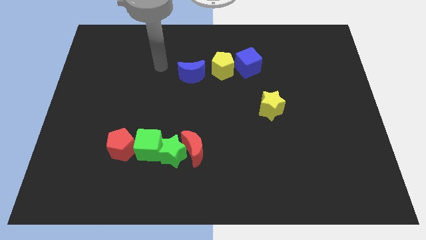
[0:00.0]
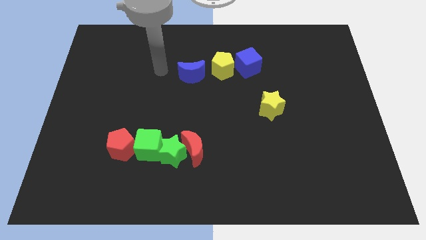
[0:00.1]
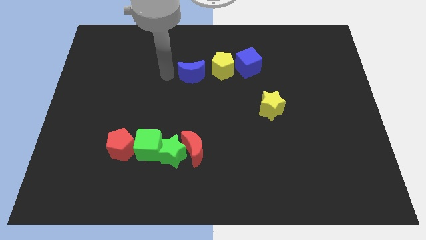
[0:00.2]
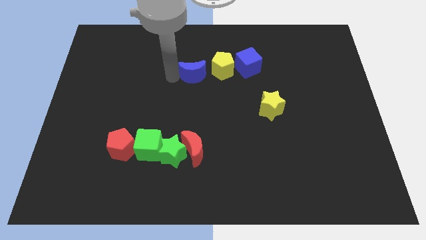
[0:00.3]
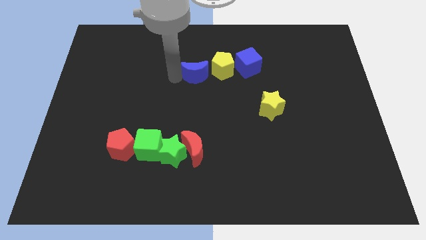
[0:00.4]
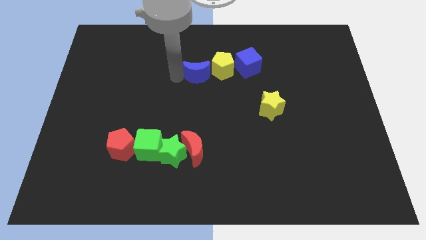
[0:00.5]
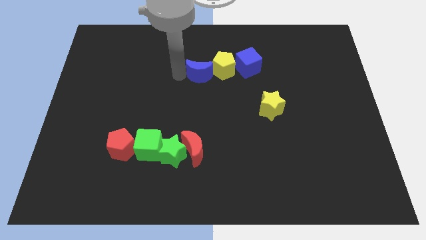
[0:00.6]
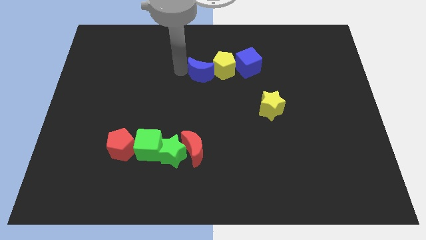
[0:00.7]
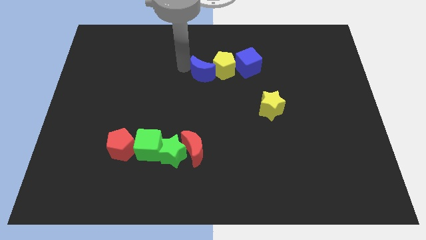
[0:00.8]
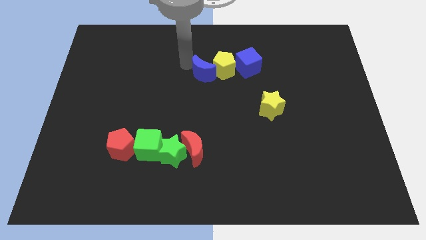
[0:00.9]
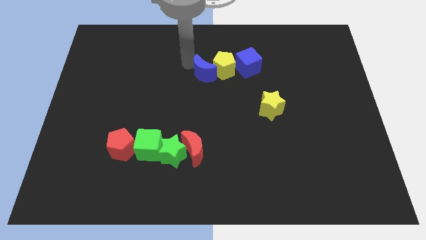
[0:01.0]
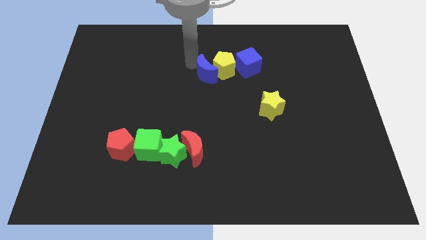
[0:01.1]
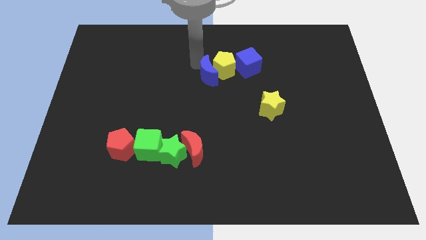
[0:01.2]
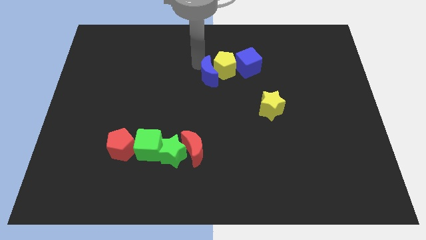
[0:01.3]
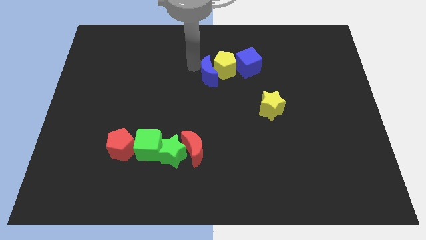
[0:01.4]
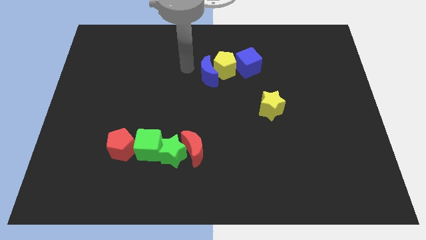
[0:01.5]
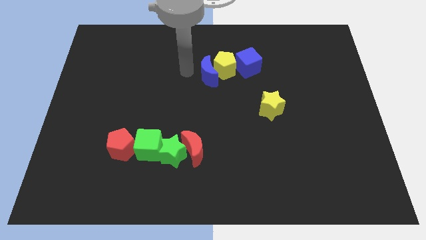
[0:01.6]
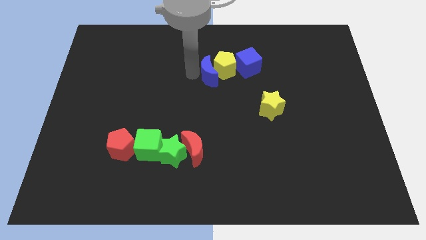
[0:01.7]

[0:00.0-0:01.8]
move the blue crescent to the left of the yellow pentagon

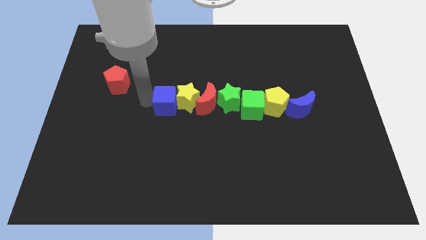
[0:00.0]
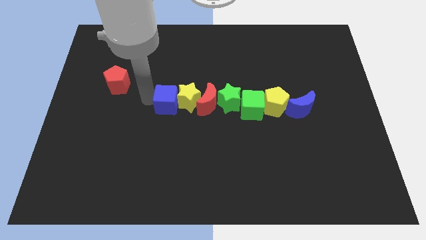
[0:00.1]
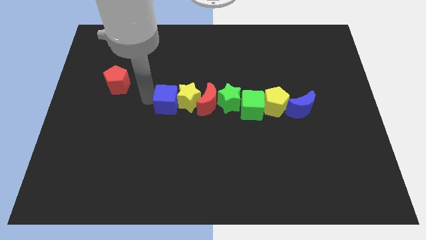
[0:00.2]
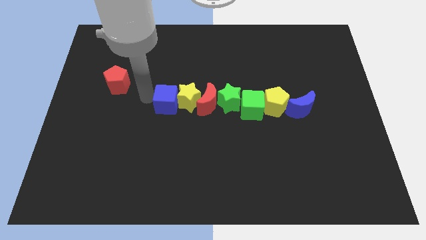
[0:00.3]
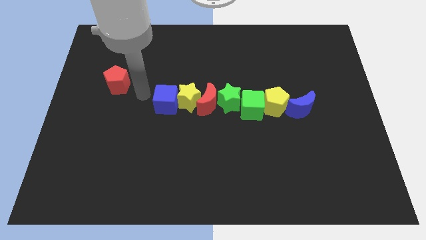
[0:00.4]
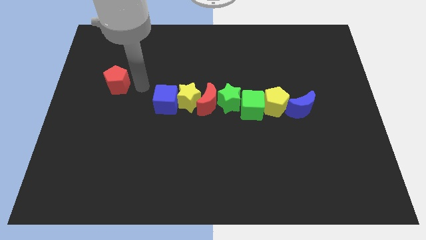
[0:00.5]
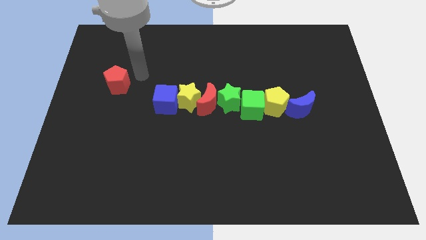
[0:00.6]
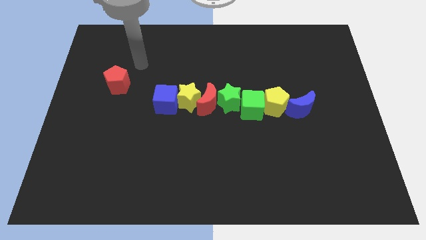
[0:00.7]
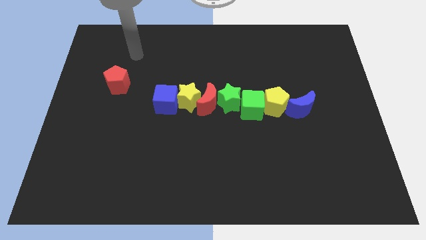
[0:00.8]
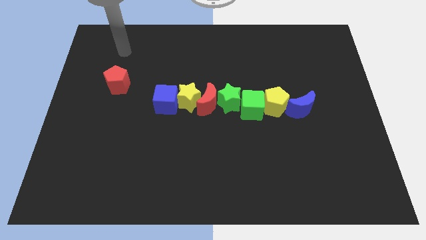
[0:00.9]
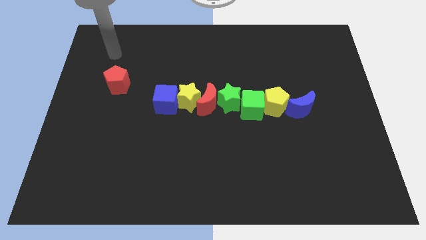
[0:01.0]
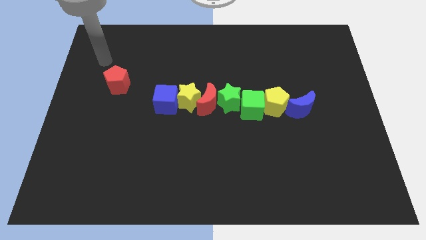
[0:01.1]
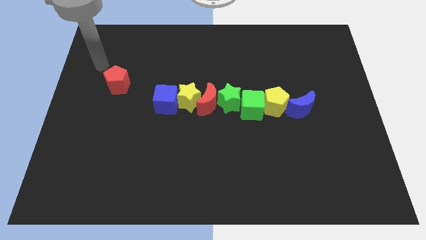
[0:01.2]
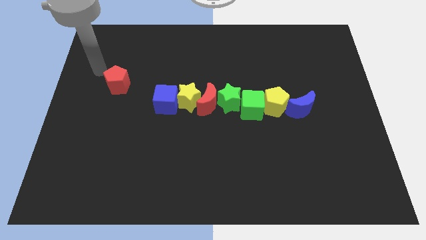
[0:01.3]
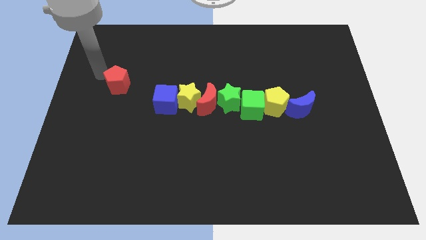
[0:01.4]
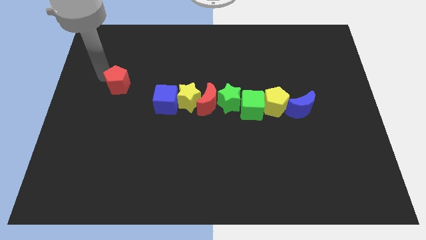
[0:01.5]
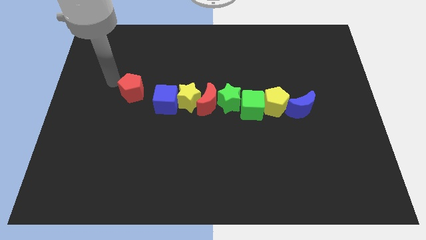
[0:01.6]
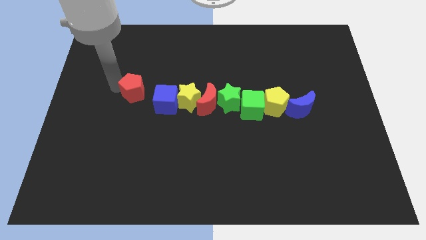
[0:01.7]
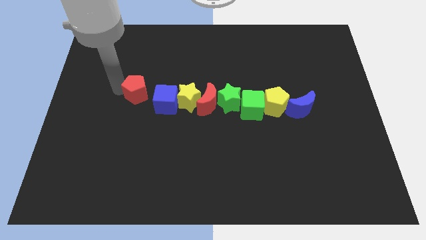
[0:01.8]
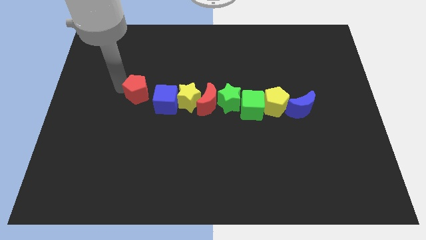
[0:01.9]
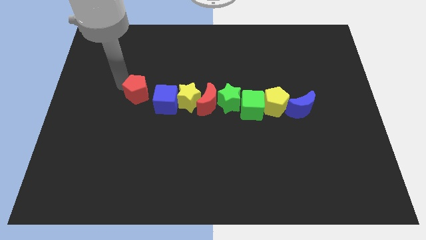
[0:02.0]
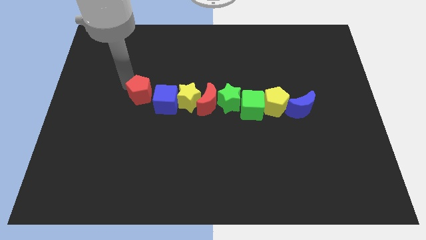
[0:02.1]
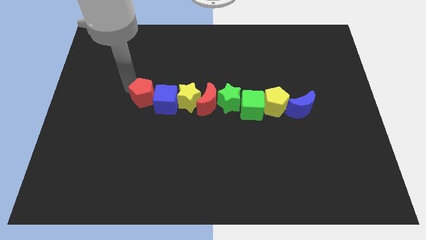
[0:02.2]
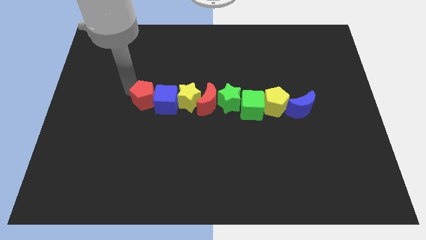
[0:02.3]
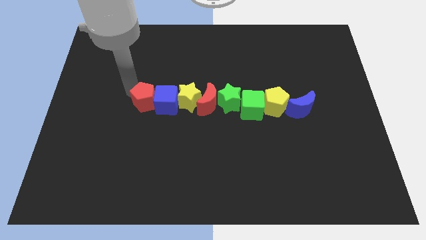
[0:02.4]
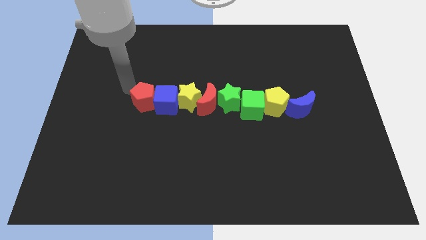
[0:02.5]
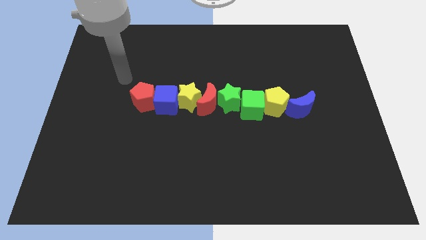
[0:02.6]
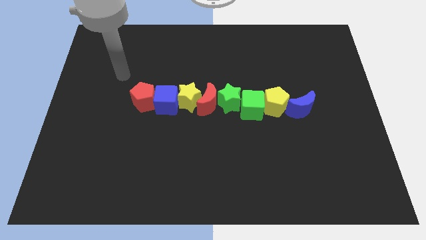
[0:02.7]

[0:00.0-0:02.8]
place the red pentagon left to the blue cube

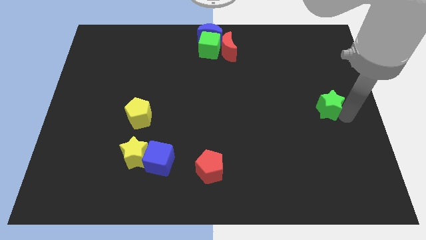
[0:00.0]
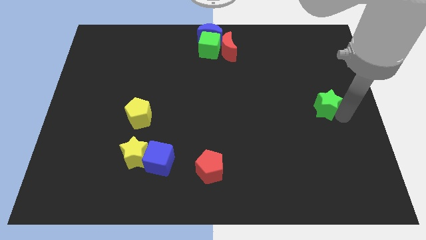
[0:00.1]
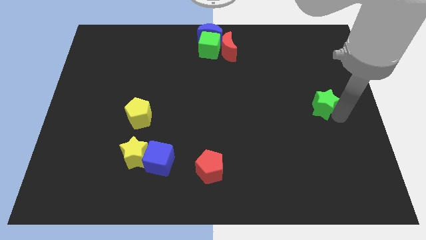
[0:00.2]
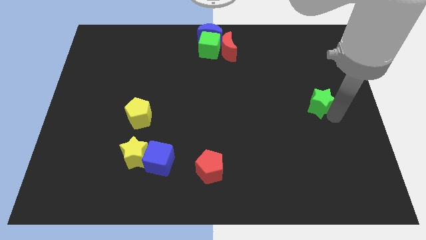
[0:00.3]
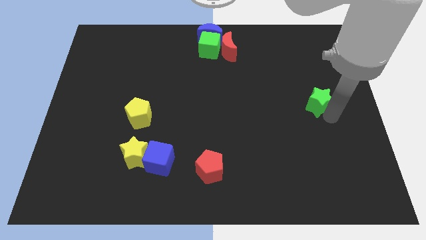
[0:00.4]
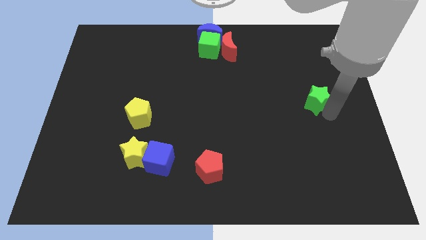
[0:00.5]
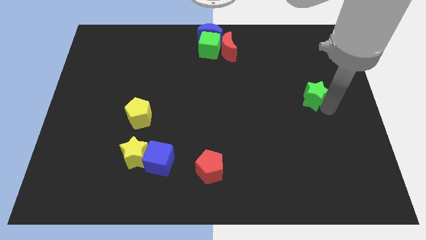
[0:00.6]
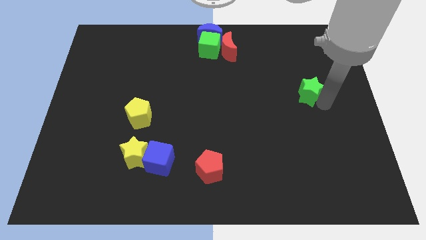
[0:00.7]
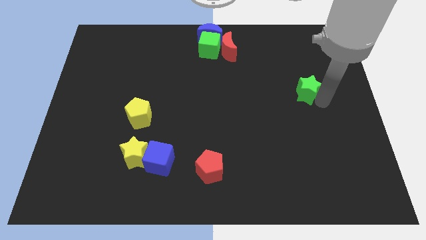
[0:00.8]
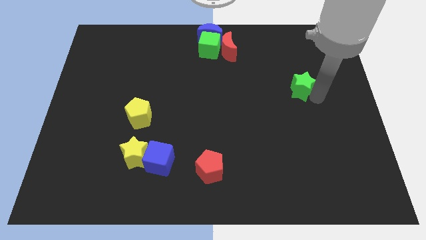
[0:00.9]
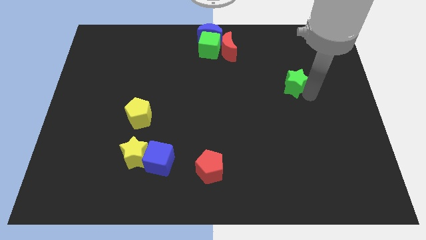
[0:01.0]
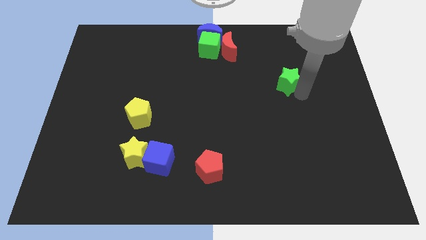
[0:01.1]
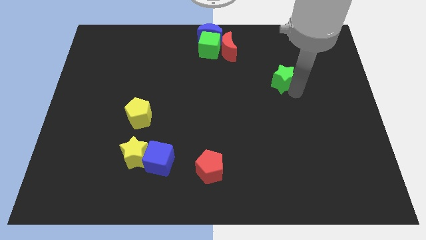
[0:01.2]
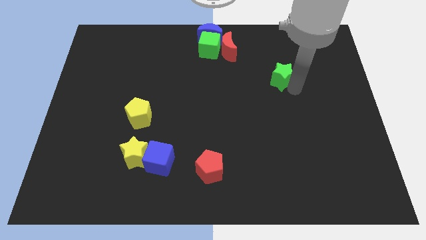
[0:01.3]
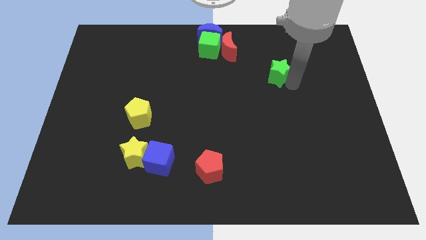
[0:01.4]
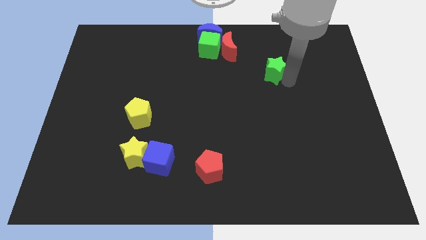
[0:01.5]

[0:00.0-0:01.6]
move the green star towards the top center of the board

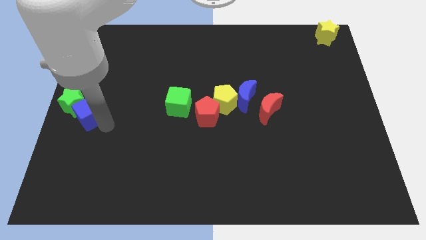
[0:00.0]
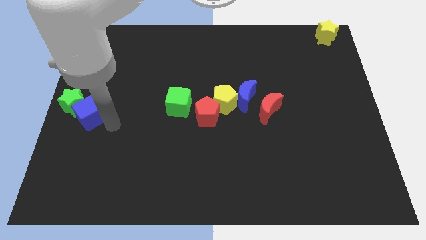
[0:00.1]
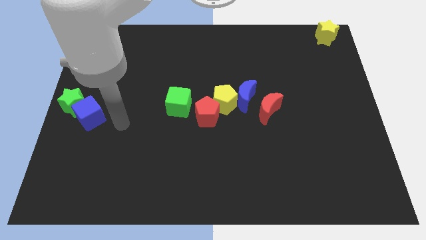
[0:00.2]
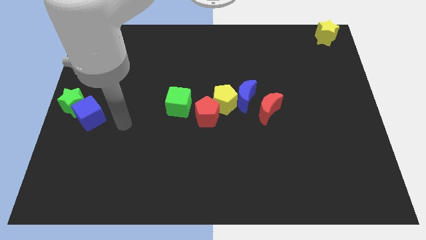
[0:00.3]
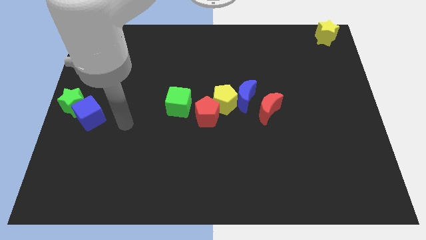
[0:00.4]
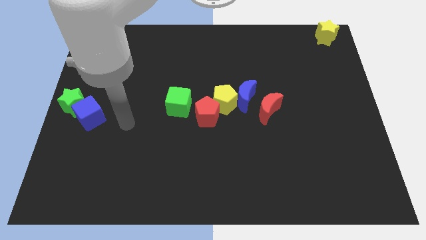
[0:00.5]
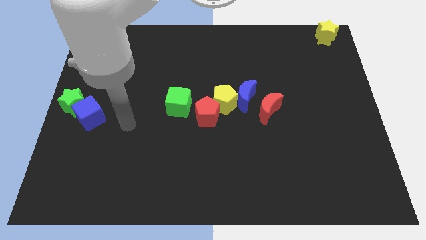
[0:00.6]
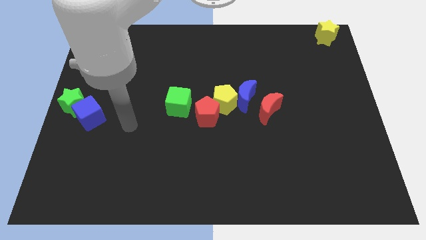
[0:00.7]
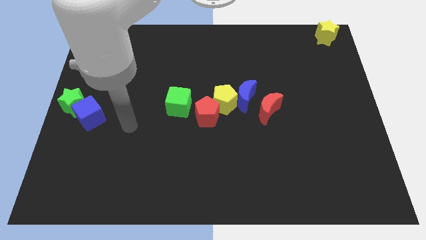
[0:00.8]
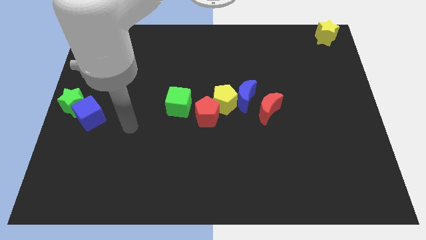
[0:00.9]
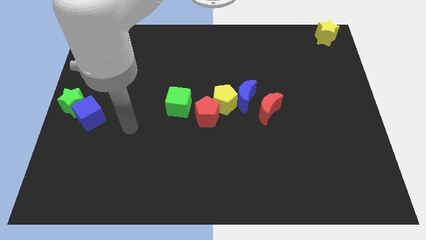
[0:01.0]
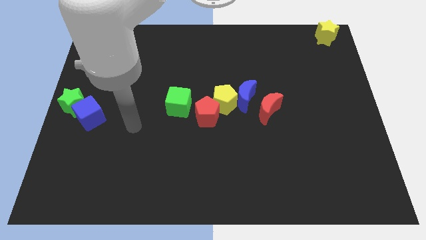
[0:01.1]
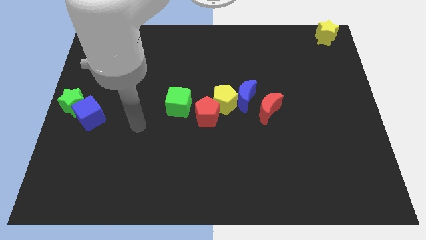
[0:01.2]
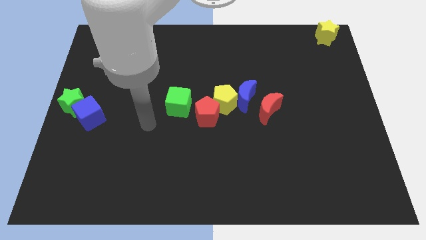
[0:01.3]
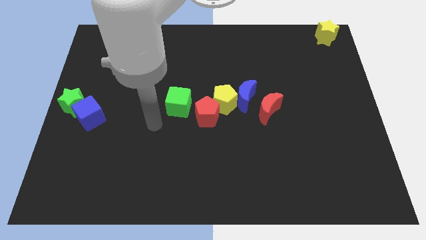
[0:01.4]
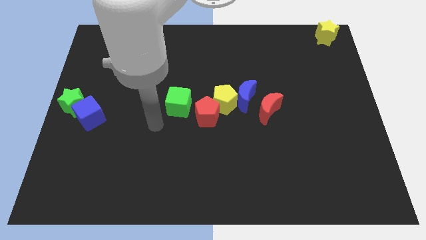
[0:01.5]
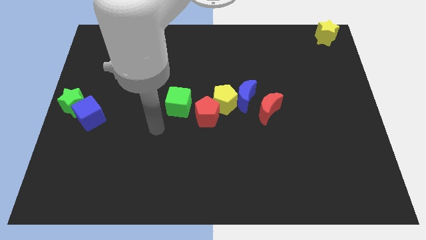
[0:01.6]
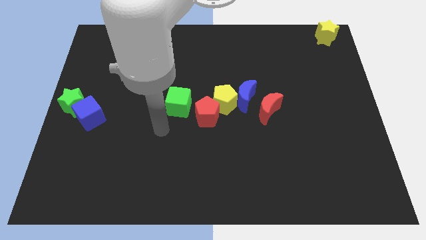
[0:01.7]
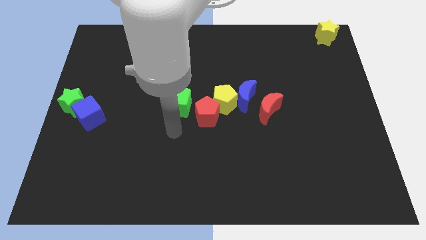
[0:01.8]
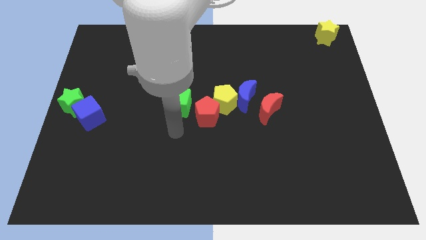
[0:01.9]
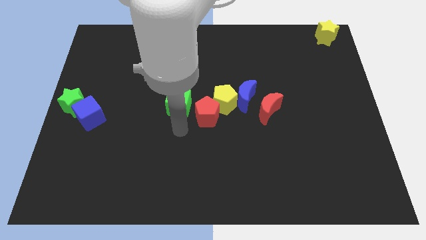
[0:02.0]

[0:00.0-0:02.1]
go to the bottom side of the green cube

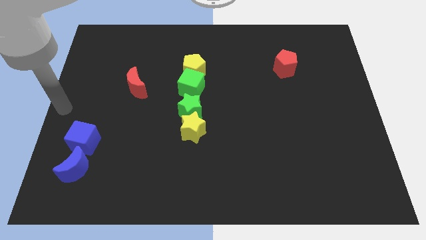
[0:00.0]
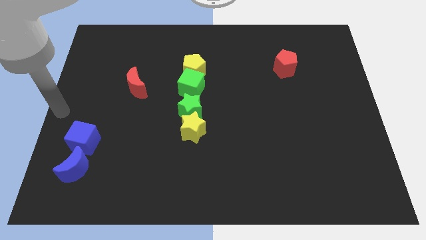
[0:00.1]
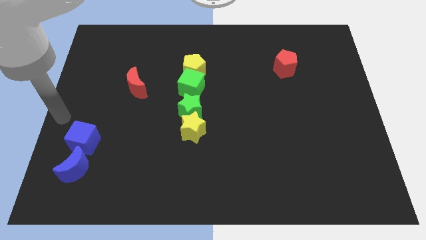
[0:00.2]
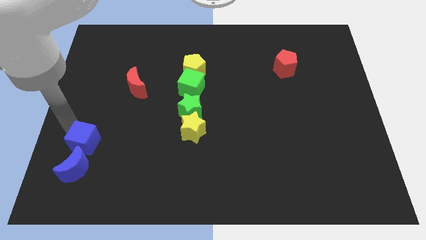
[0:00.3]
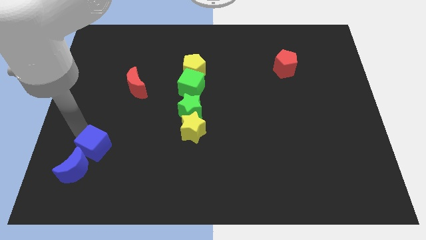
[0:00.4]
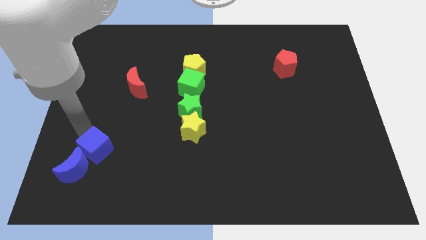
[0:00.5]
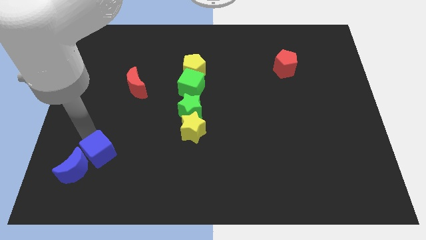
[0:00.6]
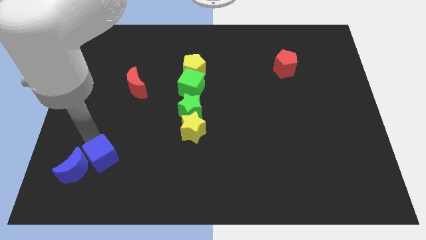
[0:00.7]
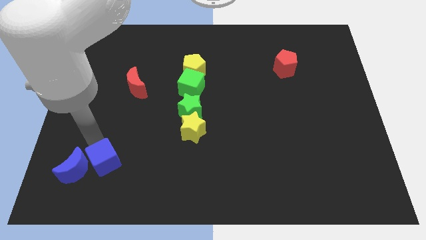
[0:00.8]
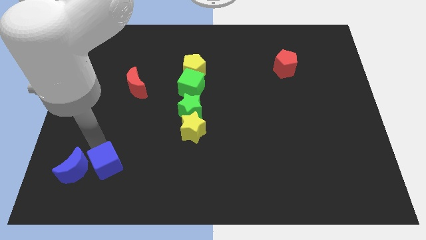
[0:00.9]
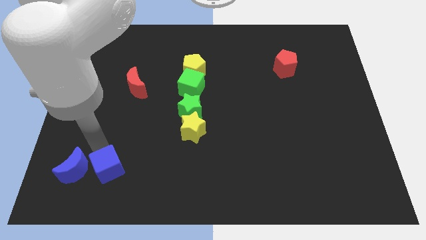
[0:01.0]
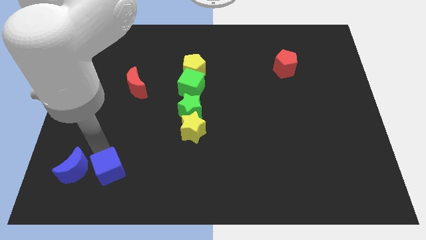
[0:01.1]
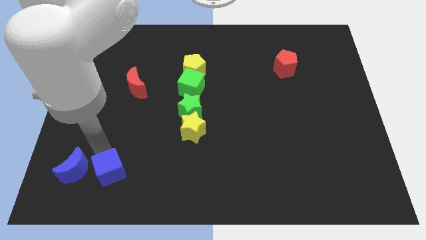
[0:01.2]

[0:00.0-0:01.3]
place blue cube to the right of the blue moon
